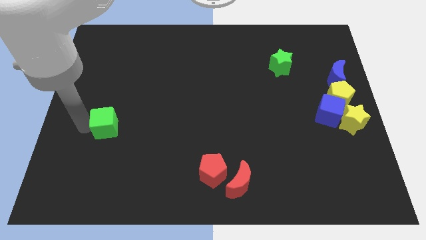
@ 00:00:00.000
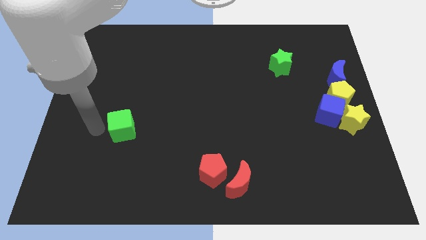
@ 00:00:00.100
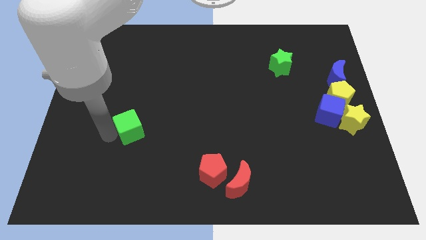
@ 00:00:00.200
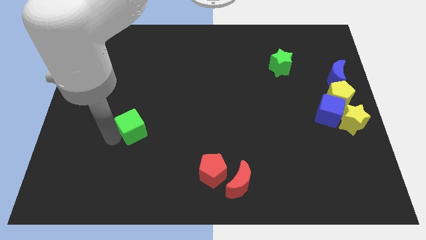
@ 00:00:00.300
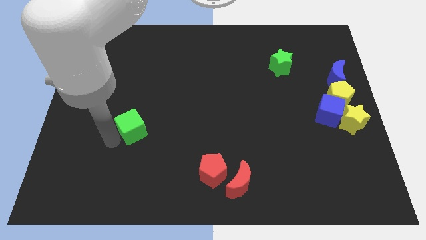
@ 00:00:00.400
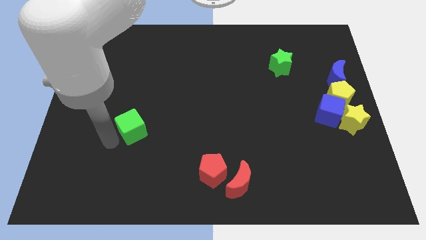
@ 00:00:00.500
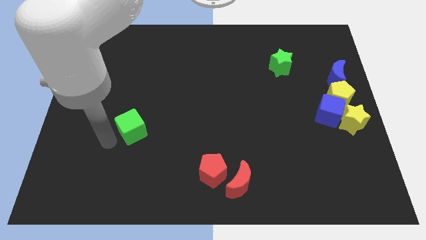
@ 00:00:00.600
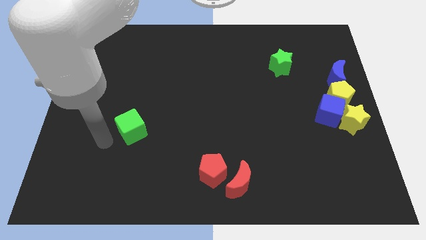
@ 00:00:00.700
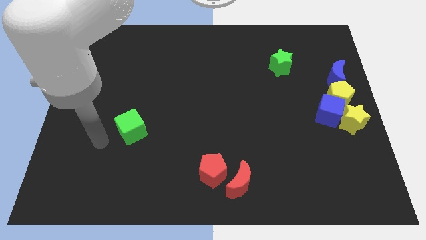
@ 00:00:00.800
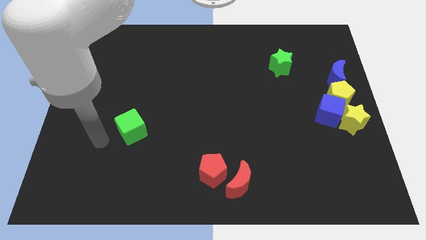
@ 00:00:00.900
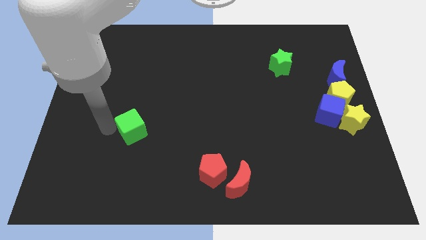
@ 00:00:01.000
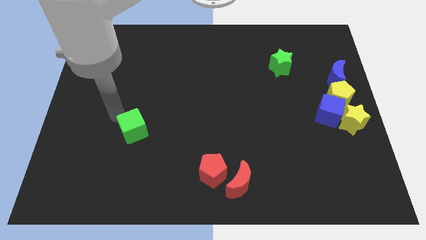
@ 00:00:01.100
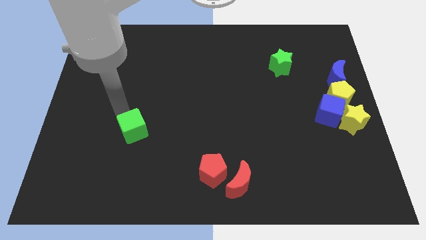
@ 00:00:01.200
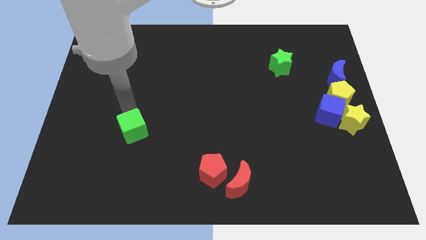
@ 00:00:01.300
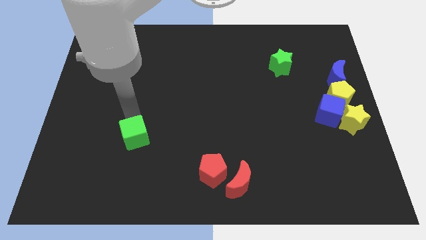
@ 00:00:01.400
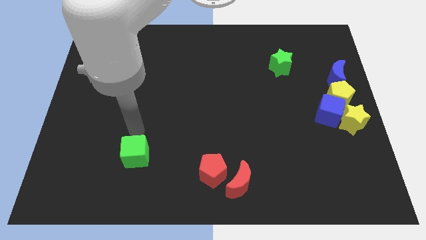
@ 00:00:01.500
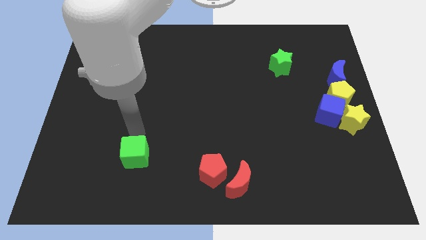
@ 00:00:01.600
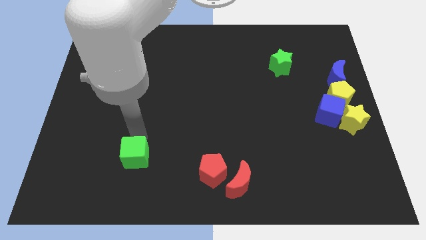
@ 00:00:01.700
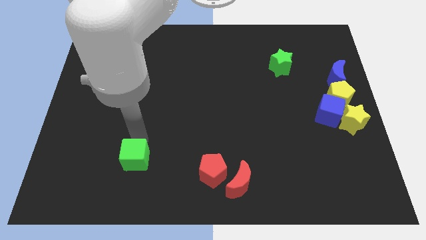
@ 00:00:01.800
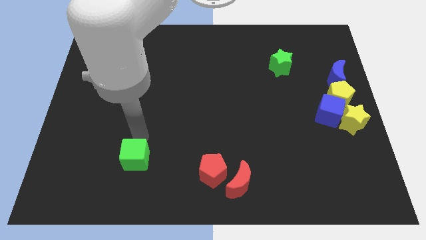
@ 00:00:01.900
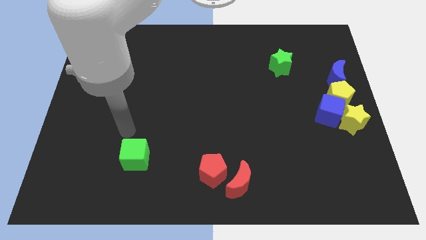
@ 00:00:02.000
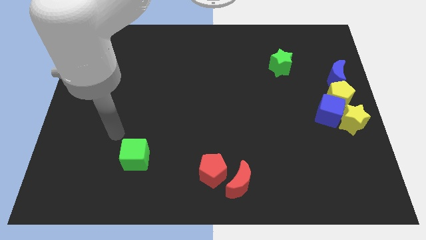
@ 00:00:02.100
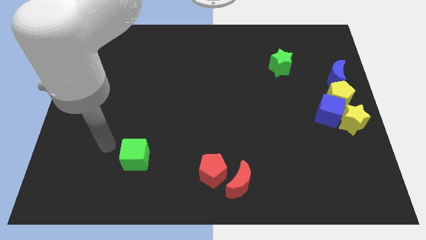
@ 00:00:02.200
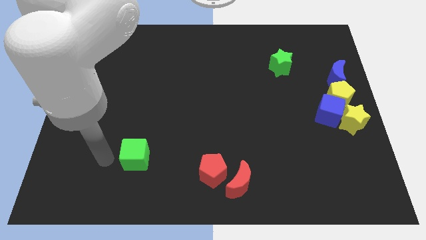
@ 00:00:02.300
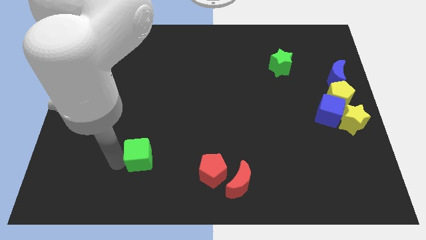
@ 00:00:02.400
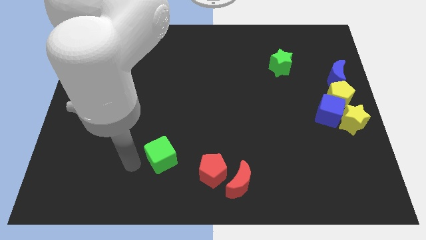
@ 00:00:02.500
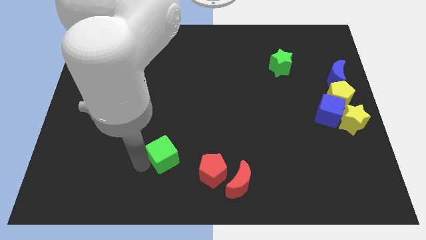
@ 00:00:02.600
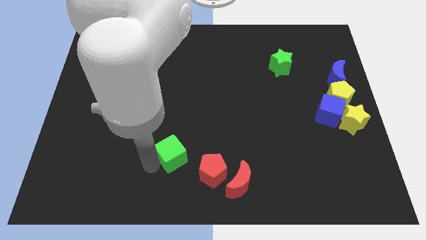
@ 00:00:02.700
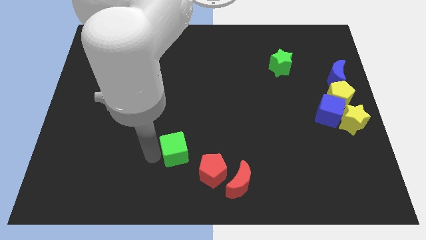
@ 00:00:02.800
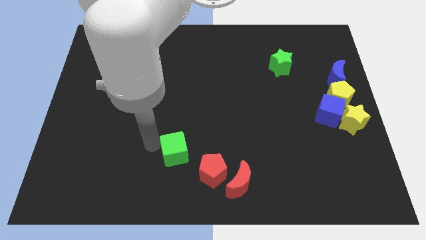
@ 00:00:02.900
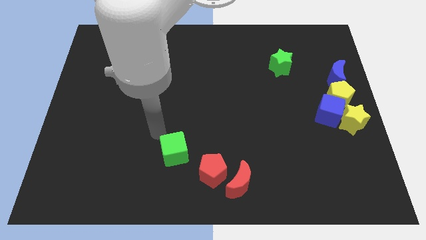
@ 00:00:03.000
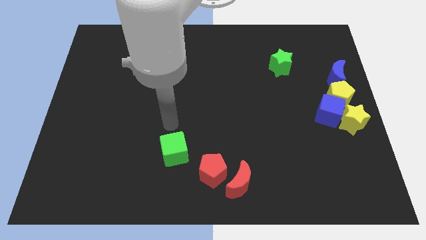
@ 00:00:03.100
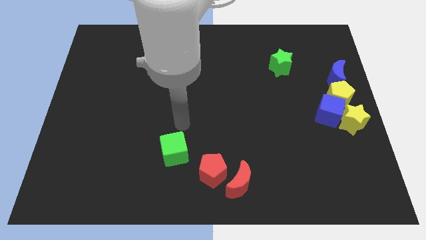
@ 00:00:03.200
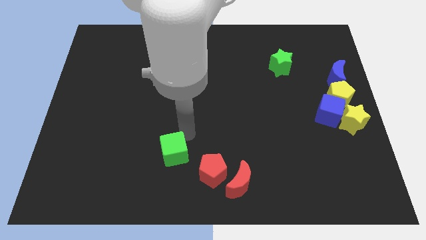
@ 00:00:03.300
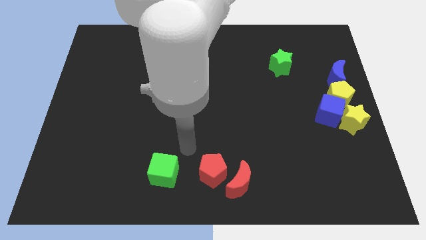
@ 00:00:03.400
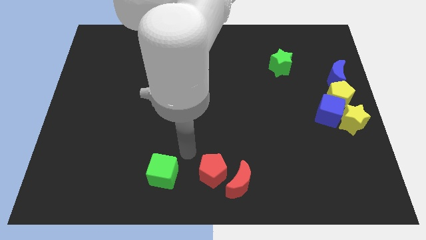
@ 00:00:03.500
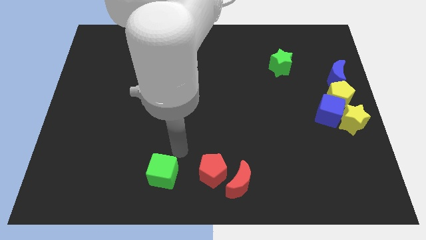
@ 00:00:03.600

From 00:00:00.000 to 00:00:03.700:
place the green cube left to the red pentagon

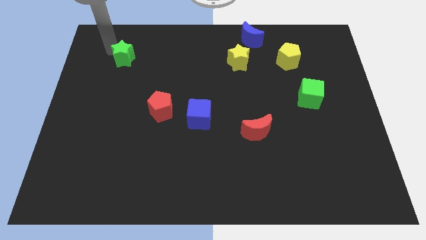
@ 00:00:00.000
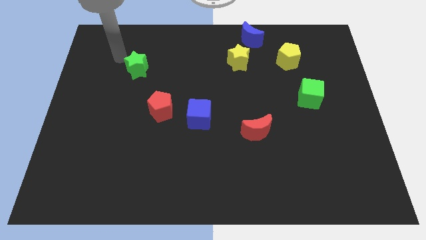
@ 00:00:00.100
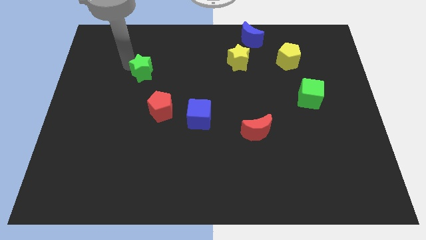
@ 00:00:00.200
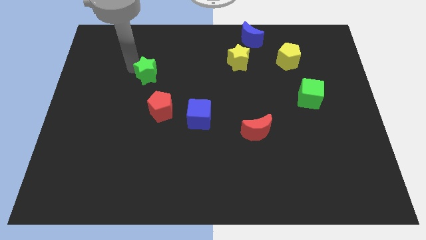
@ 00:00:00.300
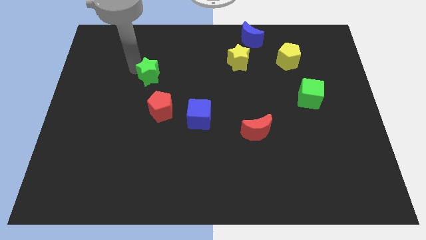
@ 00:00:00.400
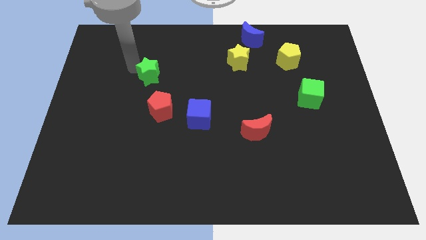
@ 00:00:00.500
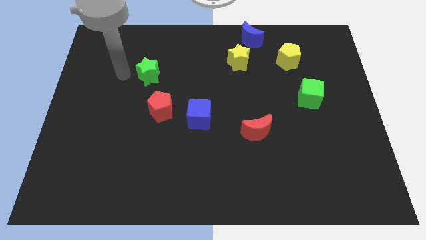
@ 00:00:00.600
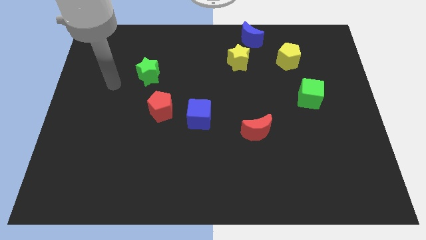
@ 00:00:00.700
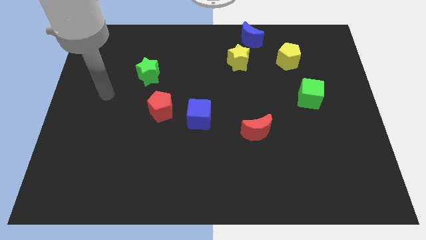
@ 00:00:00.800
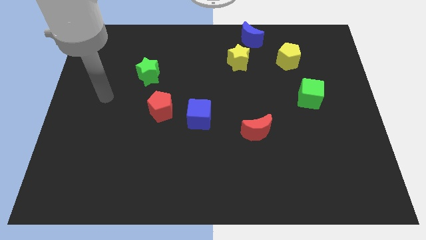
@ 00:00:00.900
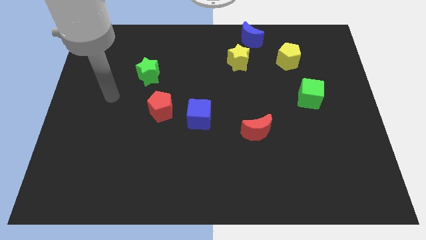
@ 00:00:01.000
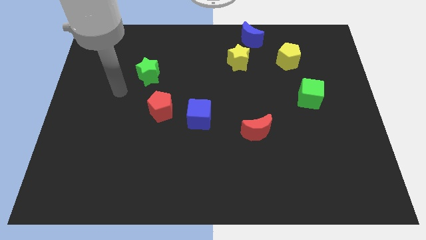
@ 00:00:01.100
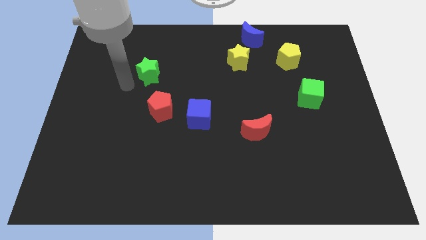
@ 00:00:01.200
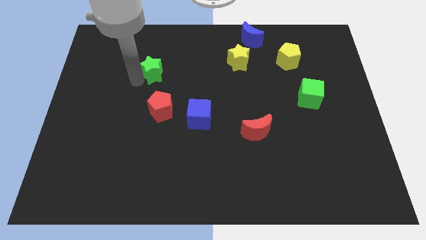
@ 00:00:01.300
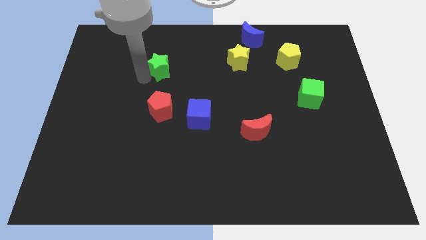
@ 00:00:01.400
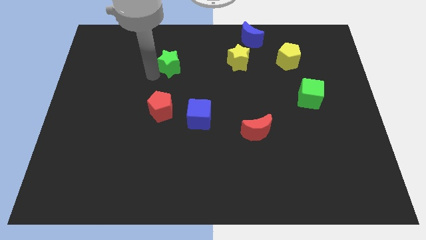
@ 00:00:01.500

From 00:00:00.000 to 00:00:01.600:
place the green star vertically above the red pentagon

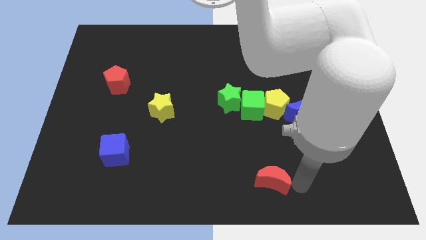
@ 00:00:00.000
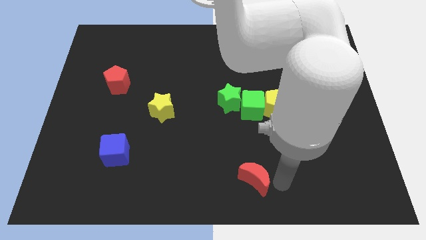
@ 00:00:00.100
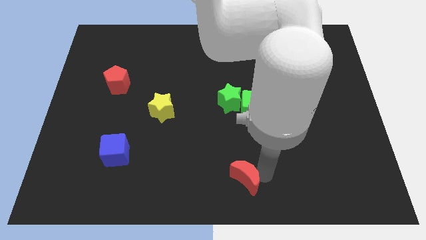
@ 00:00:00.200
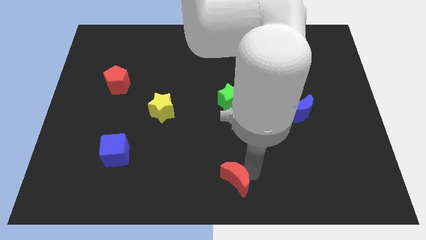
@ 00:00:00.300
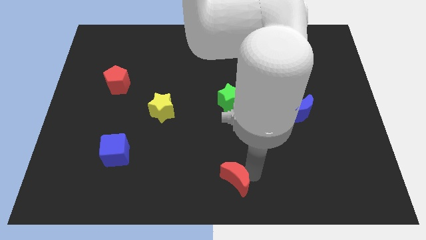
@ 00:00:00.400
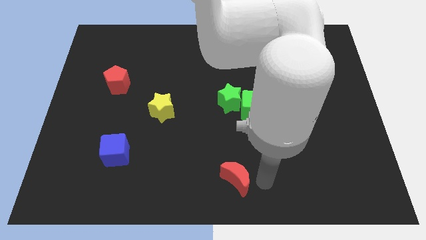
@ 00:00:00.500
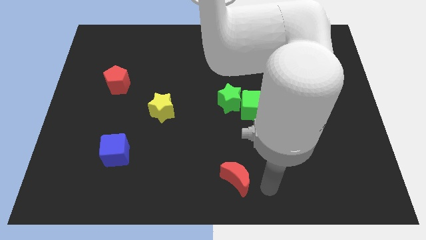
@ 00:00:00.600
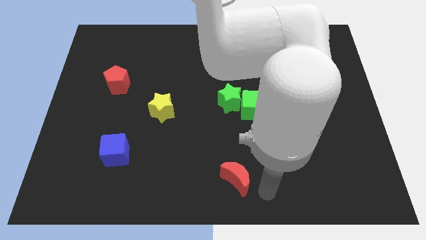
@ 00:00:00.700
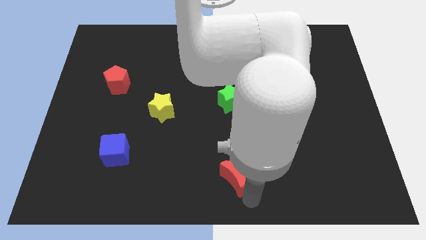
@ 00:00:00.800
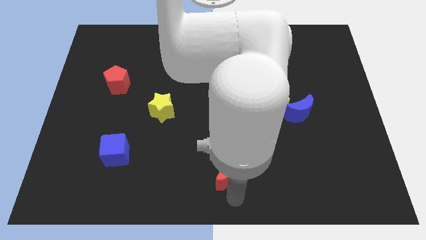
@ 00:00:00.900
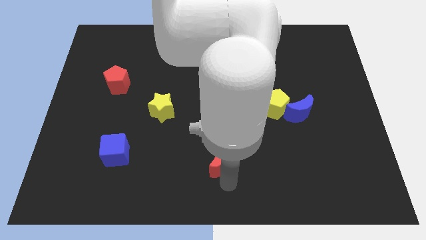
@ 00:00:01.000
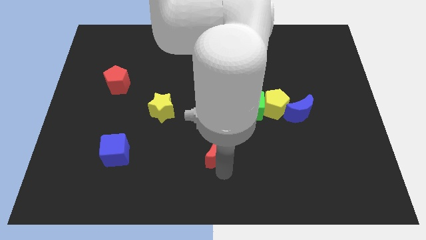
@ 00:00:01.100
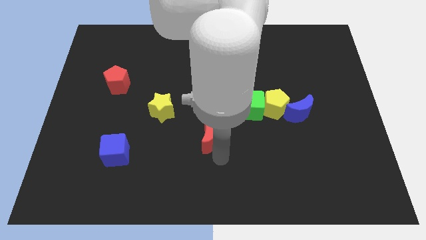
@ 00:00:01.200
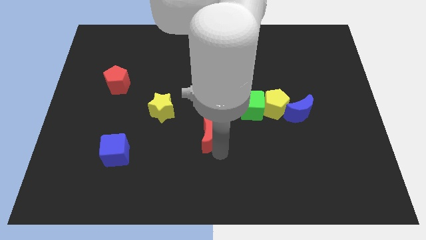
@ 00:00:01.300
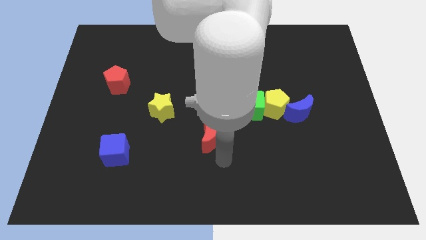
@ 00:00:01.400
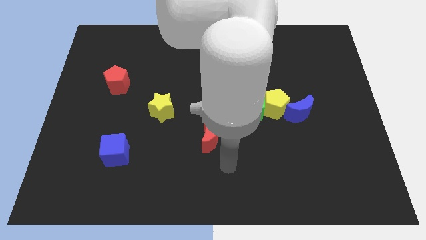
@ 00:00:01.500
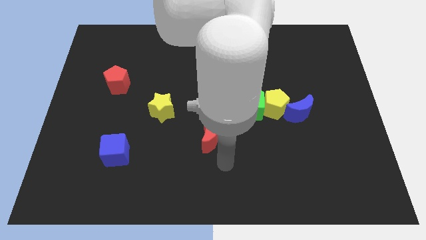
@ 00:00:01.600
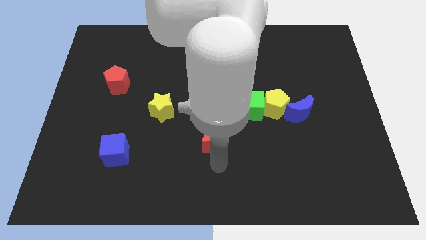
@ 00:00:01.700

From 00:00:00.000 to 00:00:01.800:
push the red crescent towards the top

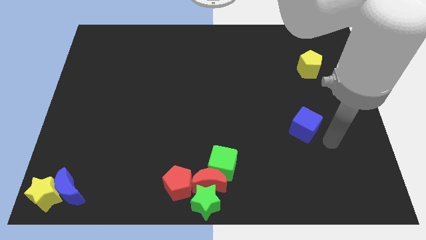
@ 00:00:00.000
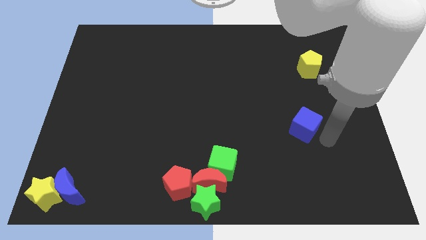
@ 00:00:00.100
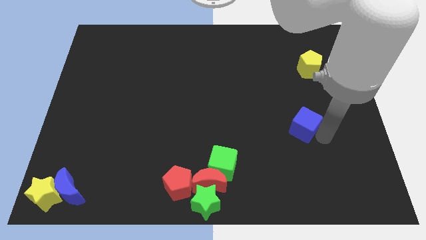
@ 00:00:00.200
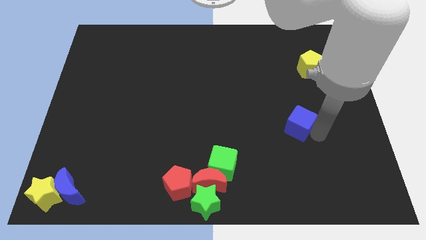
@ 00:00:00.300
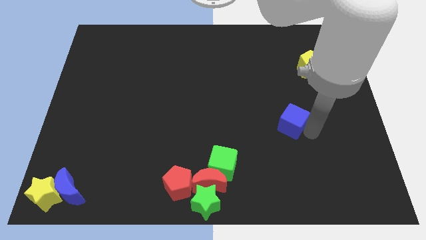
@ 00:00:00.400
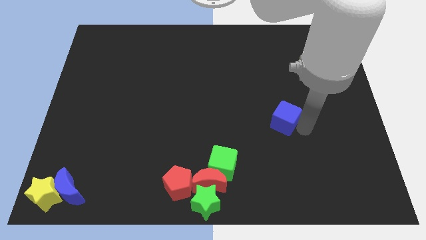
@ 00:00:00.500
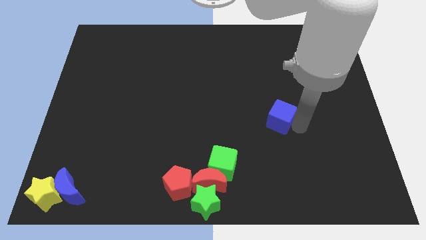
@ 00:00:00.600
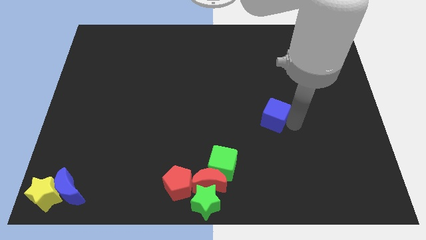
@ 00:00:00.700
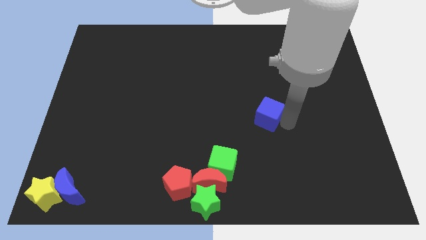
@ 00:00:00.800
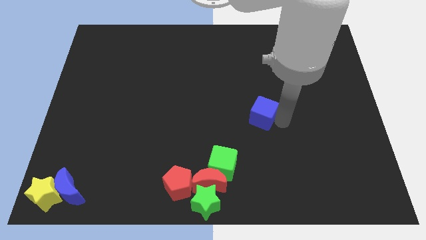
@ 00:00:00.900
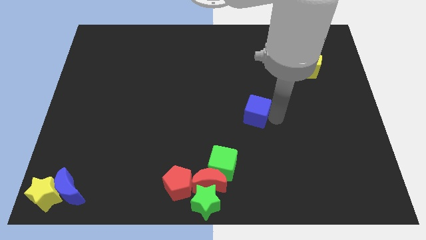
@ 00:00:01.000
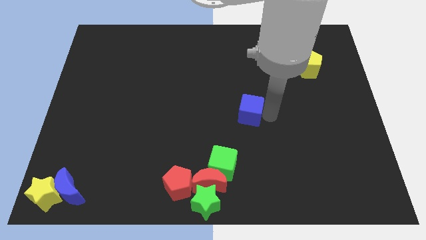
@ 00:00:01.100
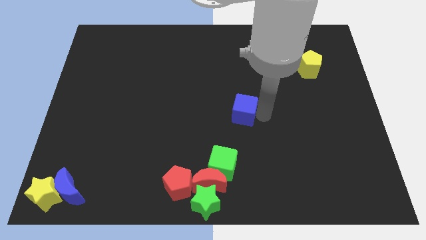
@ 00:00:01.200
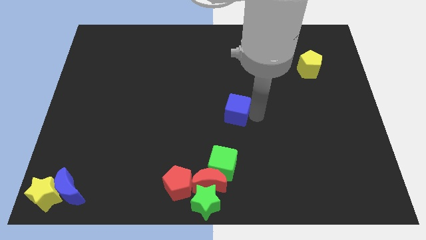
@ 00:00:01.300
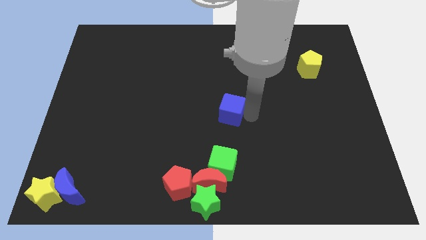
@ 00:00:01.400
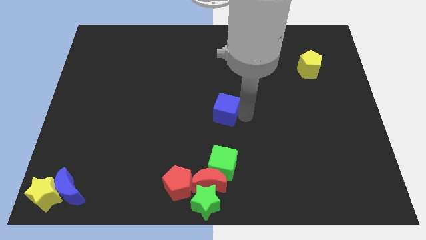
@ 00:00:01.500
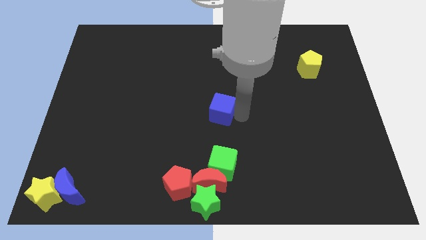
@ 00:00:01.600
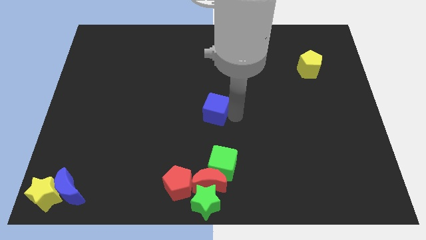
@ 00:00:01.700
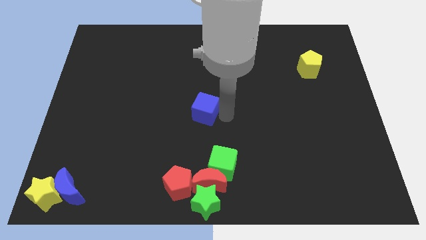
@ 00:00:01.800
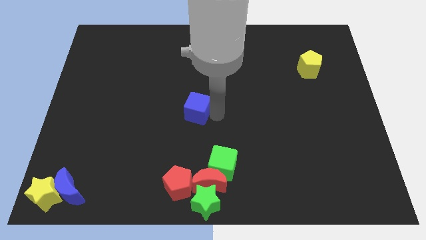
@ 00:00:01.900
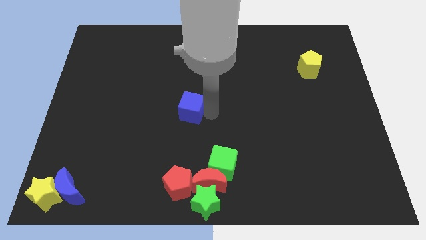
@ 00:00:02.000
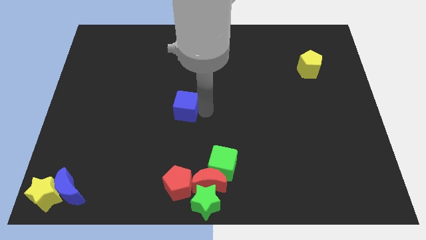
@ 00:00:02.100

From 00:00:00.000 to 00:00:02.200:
push the blue cube towards the center of the board
